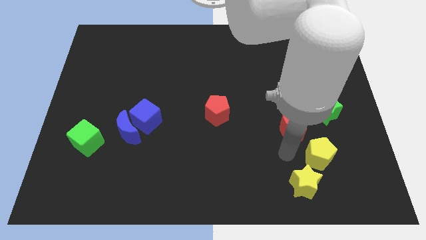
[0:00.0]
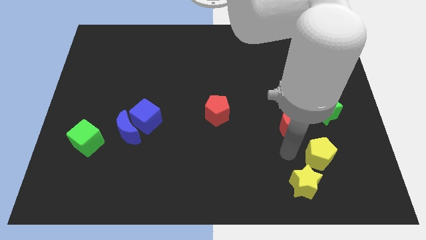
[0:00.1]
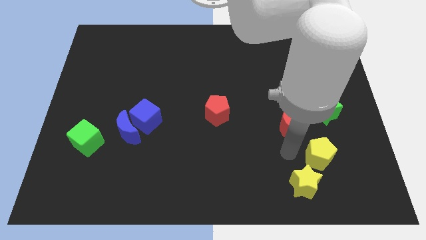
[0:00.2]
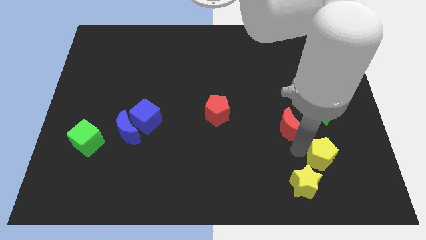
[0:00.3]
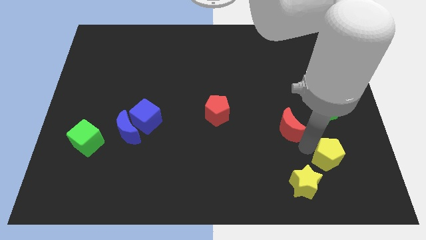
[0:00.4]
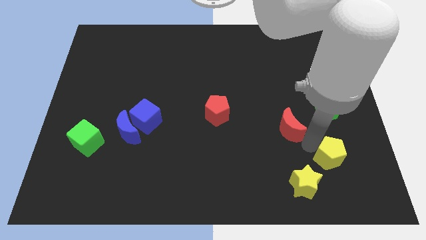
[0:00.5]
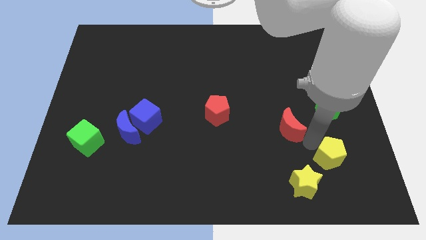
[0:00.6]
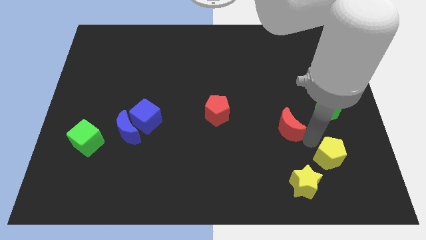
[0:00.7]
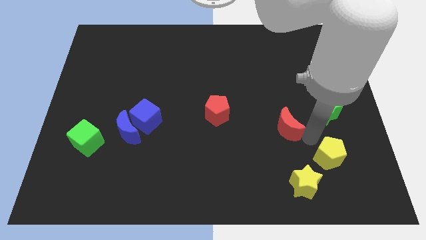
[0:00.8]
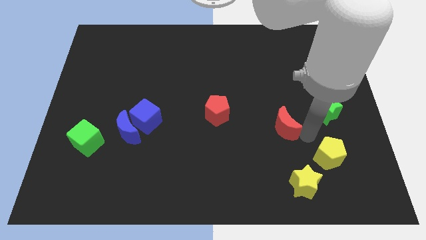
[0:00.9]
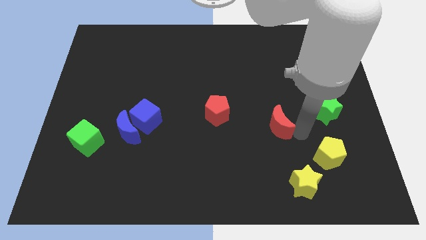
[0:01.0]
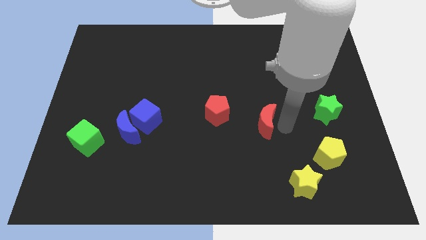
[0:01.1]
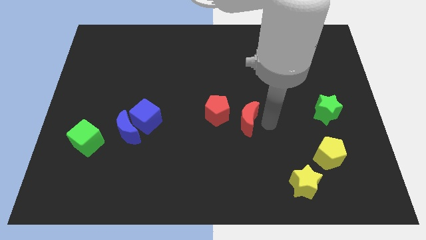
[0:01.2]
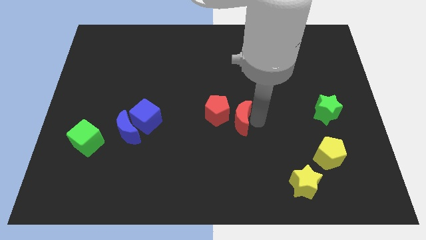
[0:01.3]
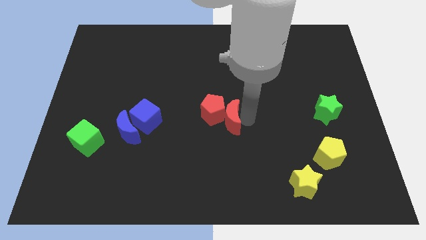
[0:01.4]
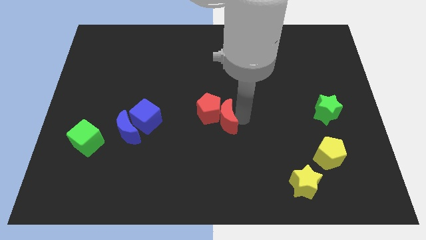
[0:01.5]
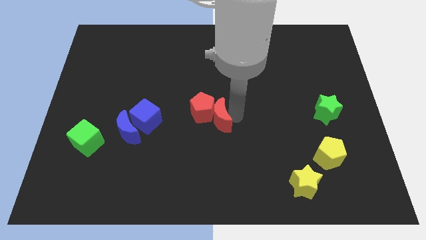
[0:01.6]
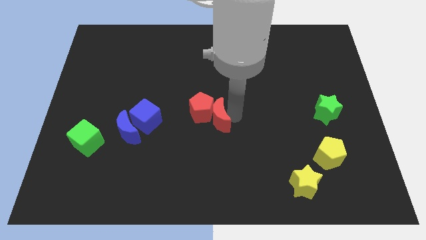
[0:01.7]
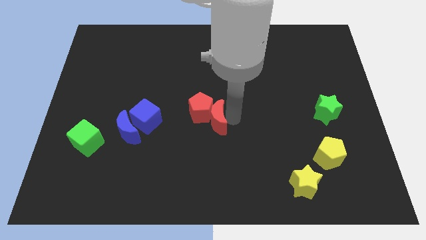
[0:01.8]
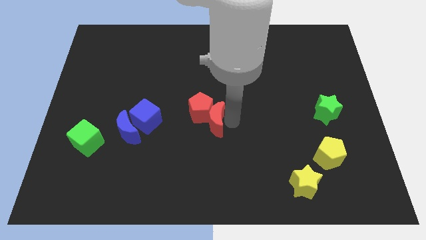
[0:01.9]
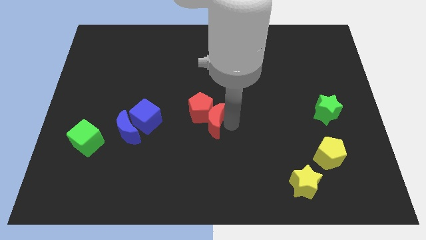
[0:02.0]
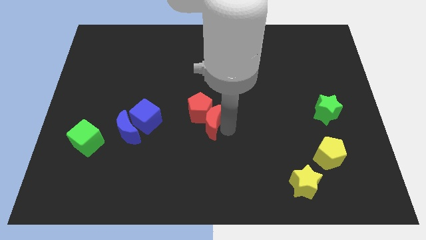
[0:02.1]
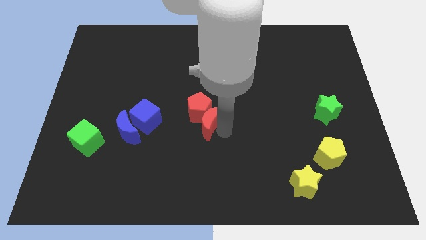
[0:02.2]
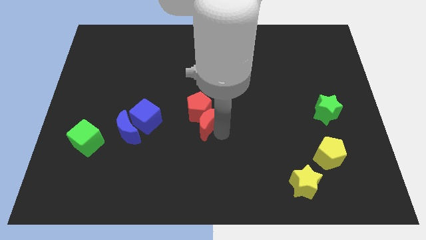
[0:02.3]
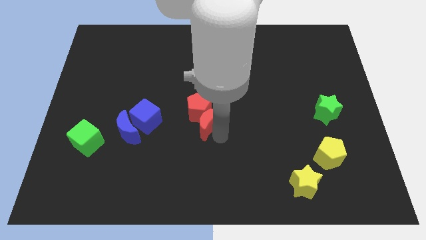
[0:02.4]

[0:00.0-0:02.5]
push red moon in to red pentagon

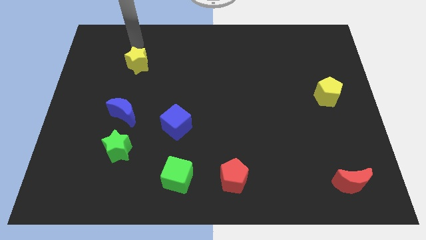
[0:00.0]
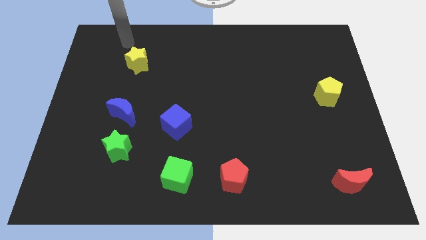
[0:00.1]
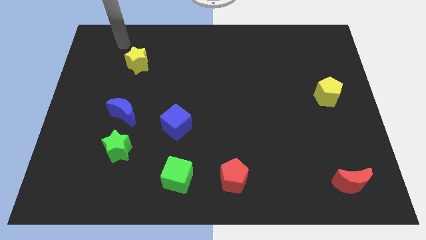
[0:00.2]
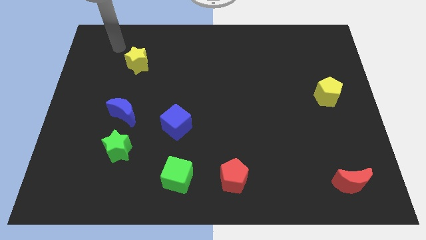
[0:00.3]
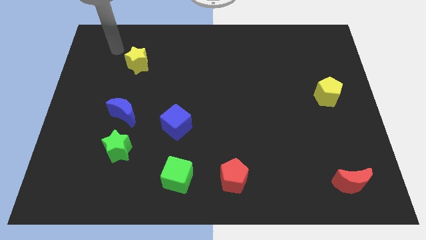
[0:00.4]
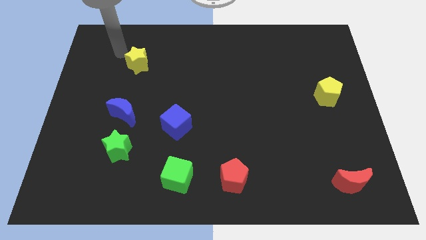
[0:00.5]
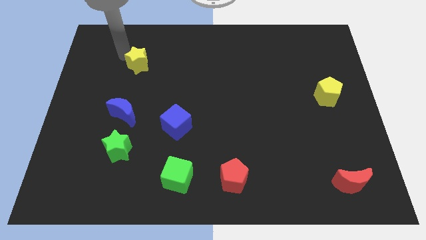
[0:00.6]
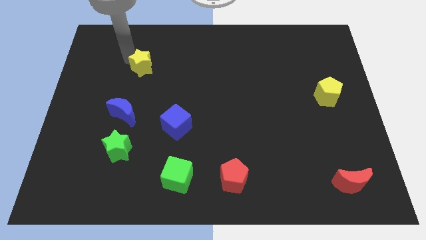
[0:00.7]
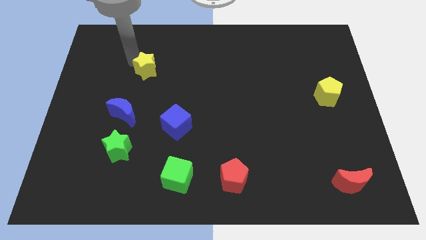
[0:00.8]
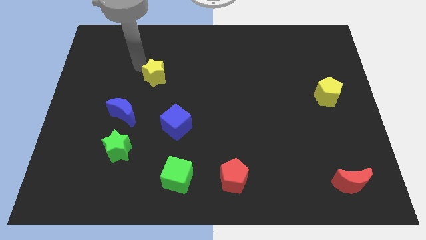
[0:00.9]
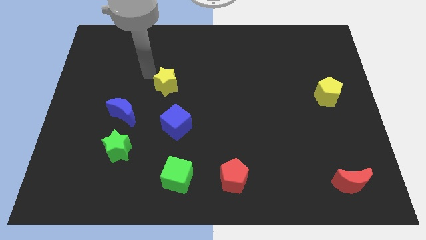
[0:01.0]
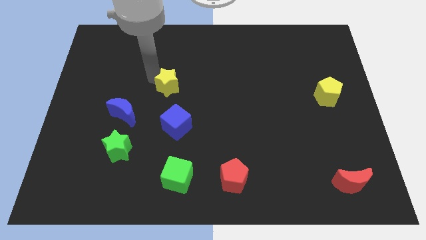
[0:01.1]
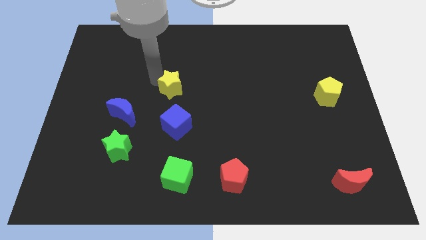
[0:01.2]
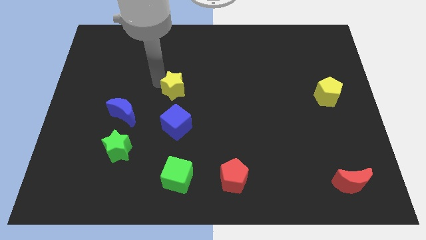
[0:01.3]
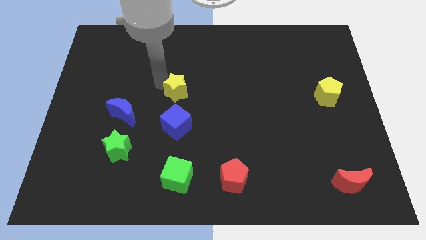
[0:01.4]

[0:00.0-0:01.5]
move the yellow star to the top side of the blue cube

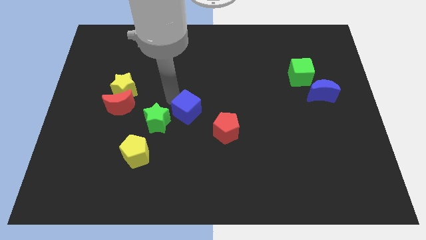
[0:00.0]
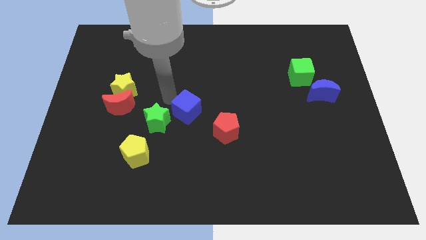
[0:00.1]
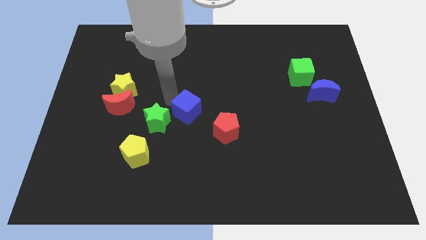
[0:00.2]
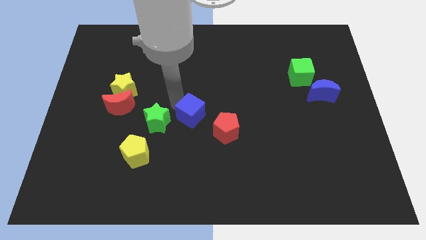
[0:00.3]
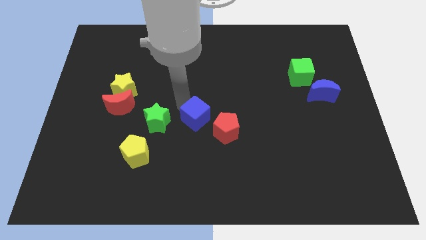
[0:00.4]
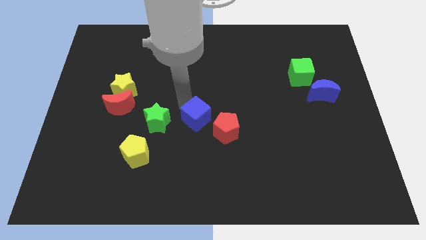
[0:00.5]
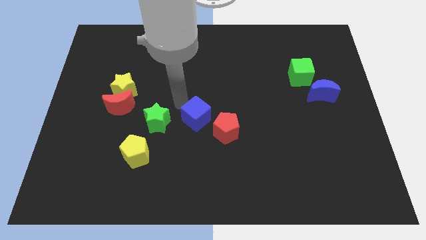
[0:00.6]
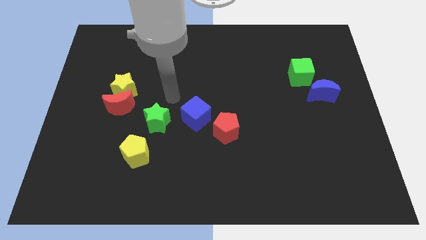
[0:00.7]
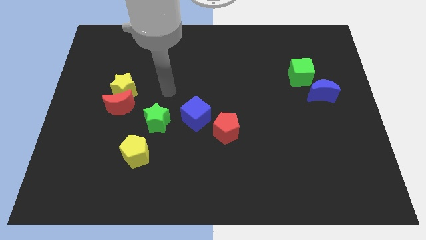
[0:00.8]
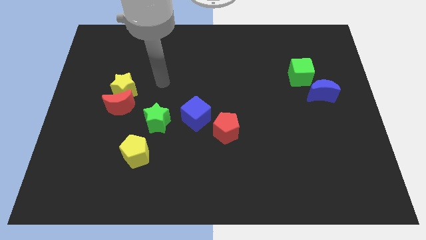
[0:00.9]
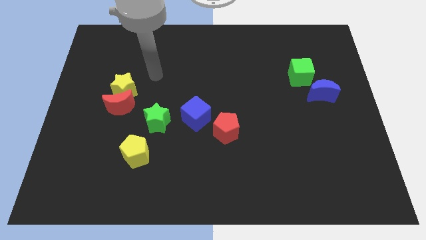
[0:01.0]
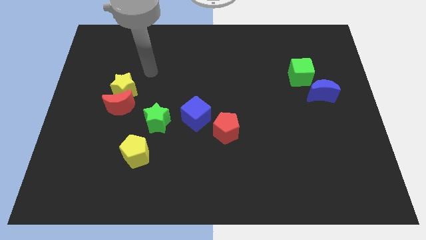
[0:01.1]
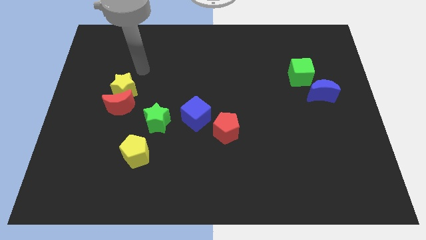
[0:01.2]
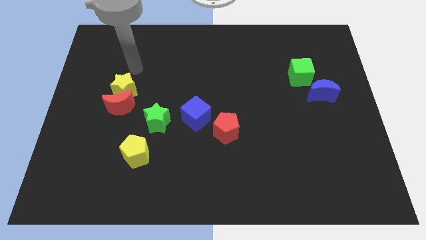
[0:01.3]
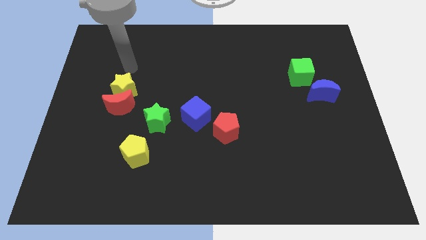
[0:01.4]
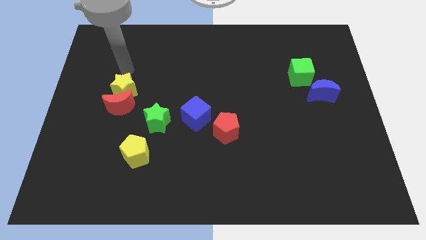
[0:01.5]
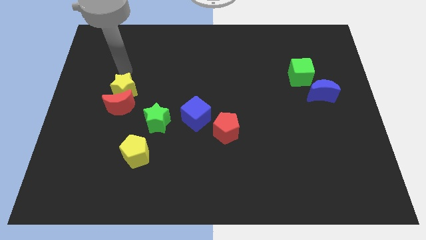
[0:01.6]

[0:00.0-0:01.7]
move your arm away from the blue cube

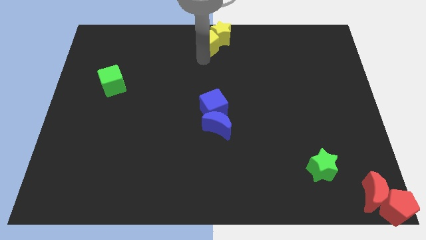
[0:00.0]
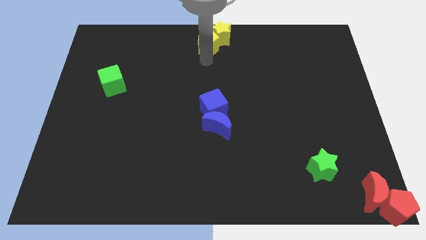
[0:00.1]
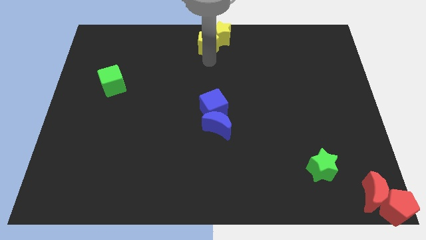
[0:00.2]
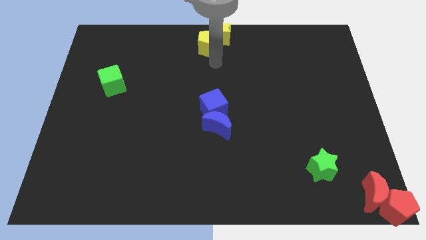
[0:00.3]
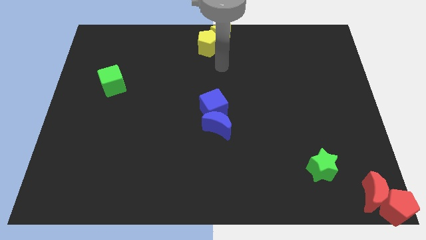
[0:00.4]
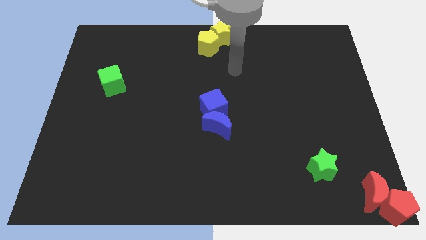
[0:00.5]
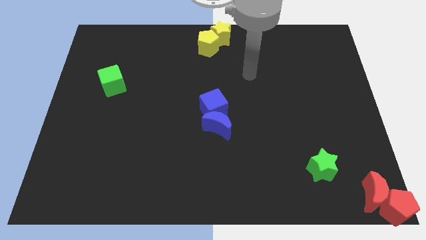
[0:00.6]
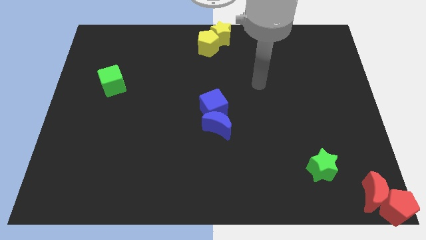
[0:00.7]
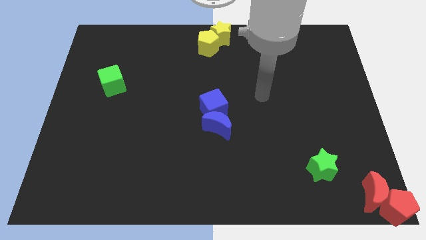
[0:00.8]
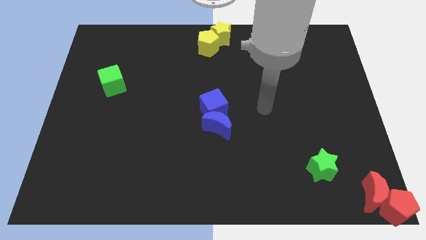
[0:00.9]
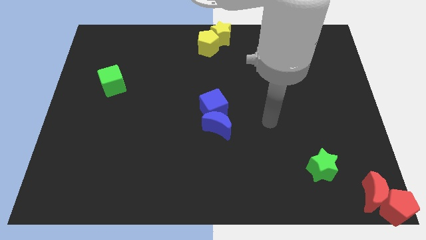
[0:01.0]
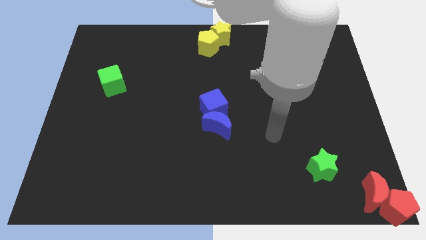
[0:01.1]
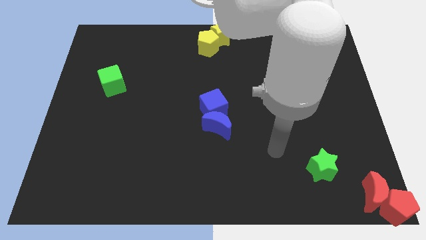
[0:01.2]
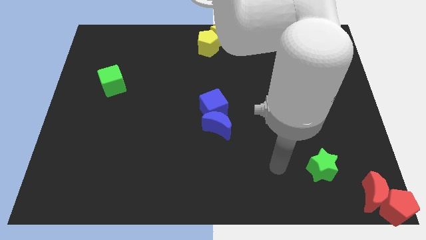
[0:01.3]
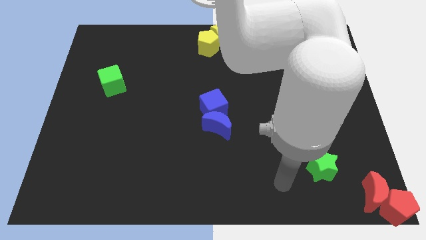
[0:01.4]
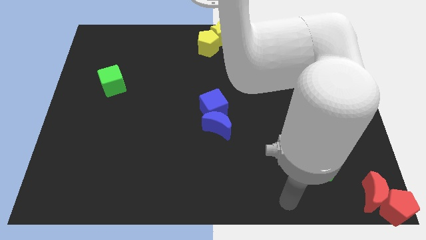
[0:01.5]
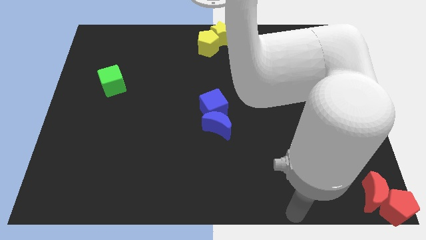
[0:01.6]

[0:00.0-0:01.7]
move the arm towards the green star

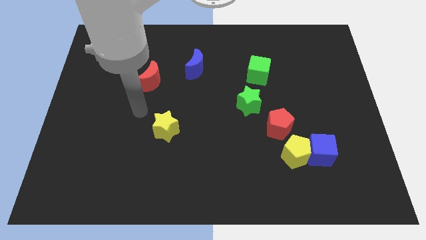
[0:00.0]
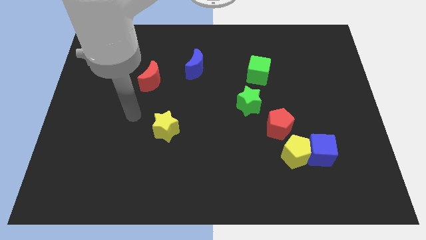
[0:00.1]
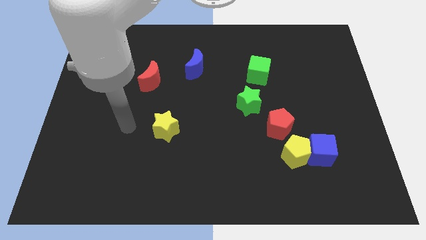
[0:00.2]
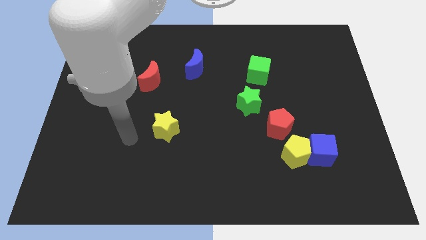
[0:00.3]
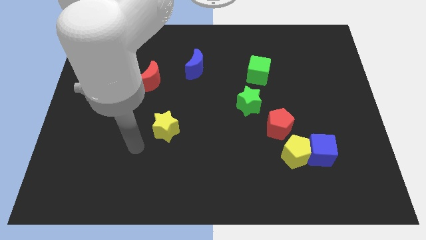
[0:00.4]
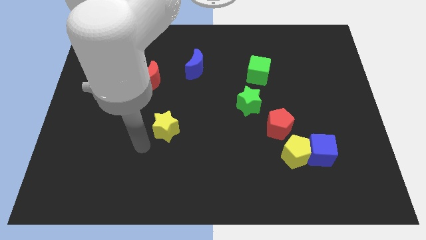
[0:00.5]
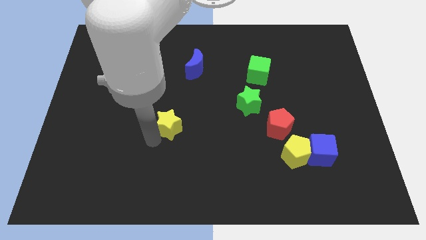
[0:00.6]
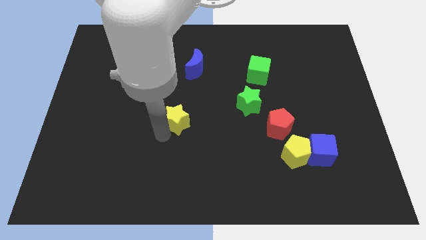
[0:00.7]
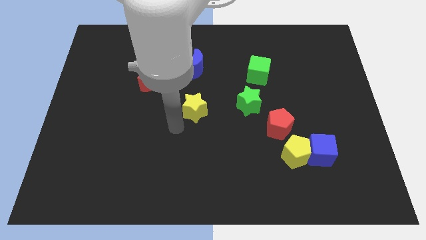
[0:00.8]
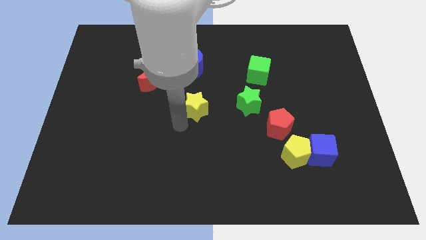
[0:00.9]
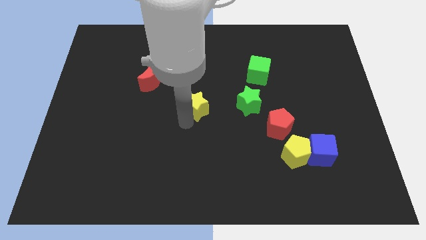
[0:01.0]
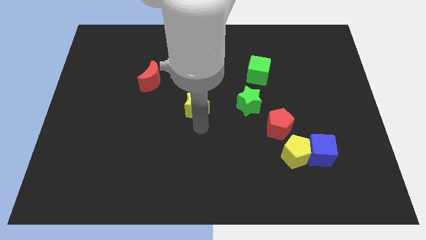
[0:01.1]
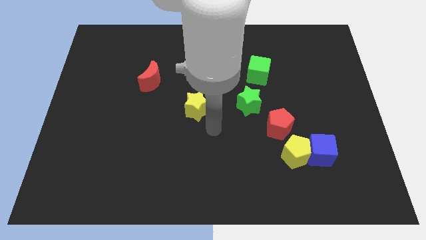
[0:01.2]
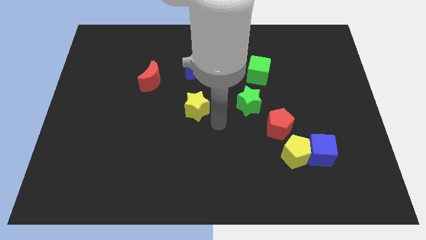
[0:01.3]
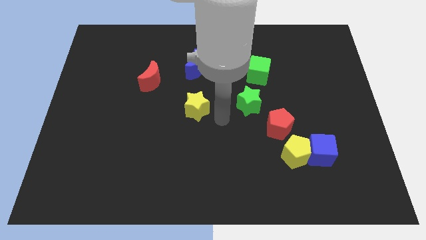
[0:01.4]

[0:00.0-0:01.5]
place the yellow star to the left of the green star
